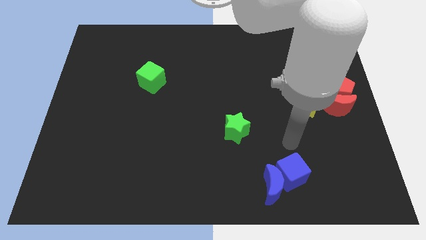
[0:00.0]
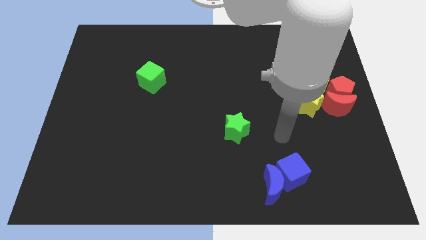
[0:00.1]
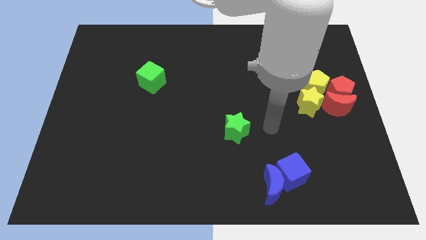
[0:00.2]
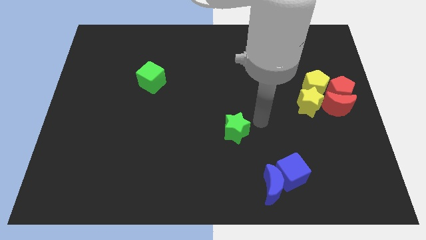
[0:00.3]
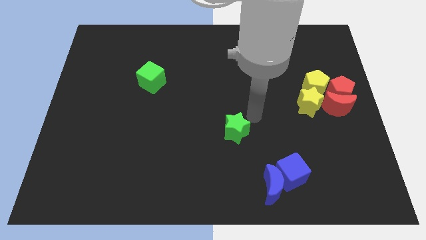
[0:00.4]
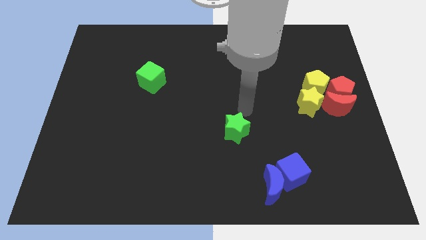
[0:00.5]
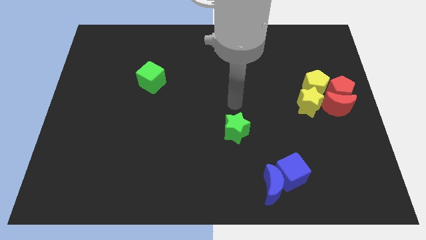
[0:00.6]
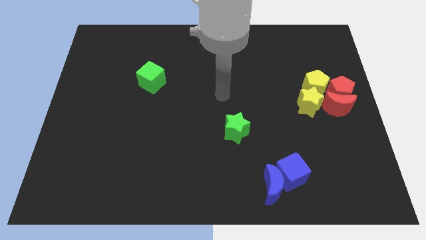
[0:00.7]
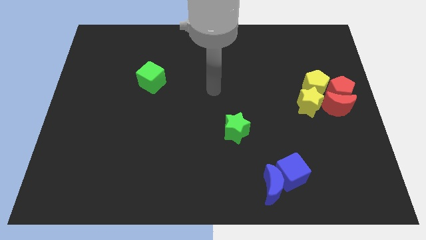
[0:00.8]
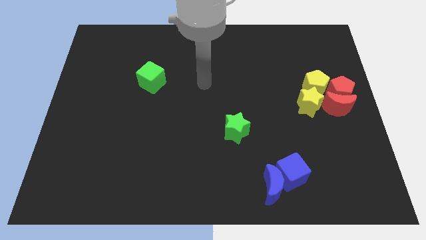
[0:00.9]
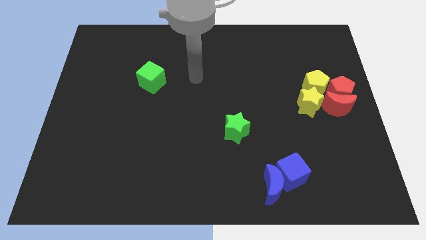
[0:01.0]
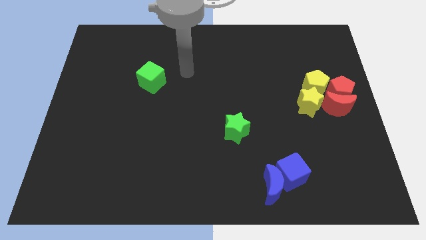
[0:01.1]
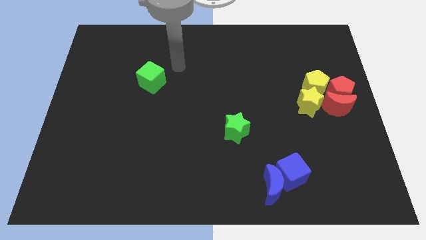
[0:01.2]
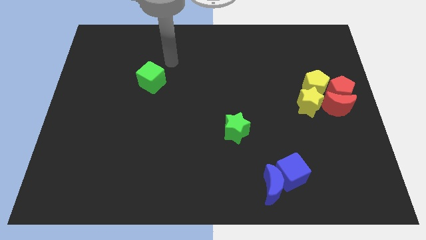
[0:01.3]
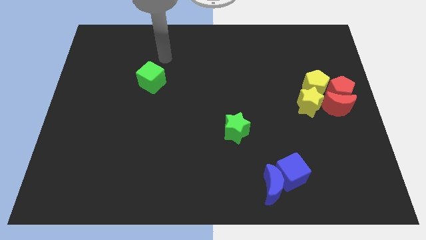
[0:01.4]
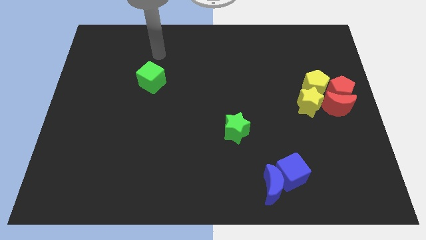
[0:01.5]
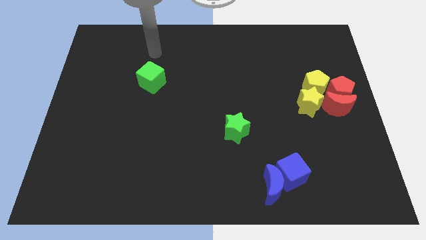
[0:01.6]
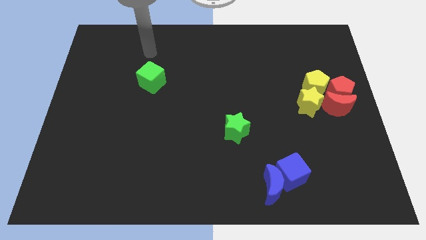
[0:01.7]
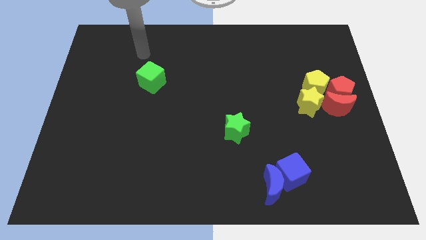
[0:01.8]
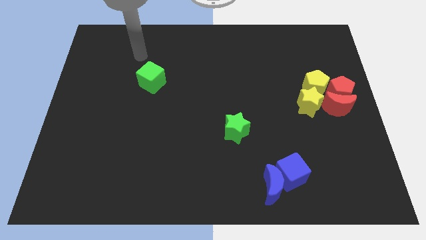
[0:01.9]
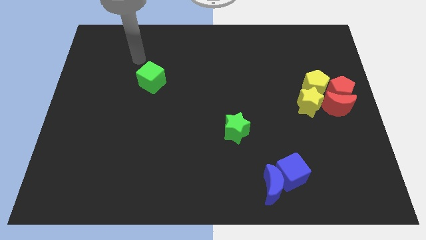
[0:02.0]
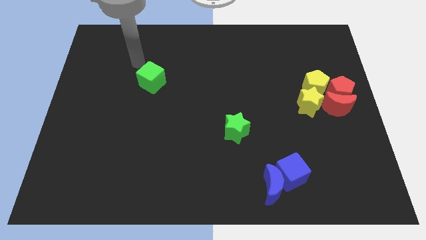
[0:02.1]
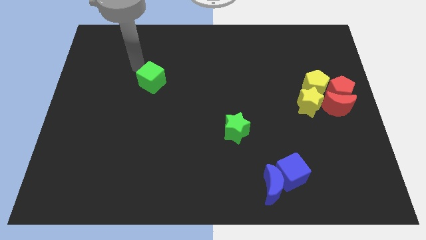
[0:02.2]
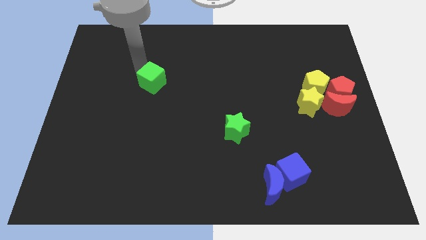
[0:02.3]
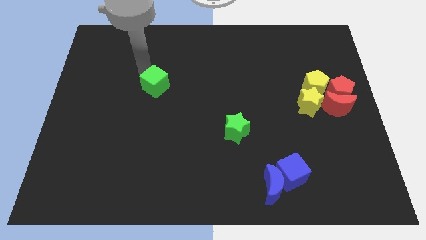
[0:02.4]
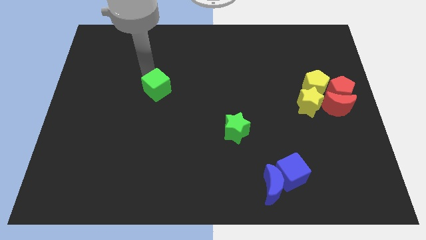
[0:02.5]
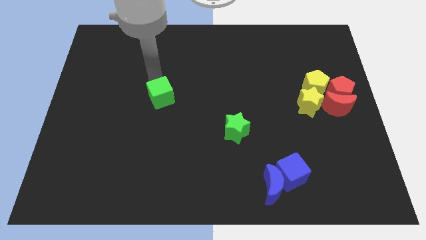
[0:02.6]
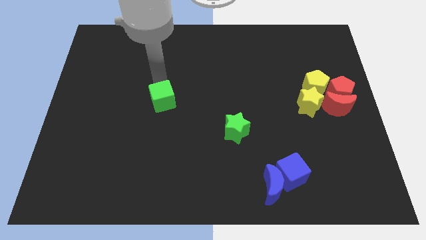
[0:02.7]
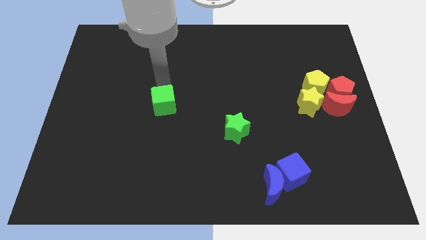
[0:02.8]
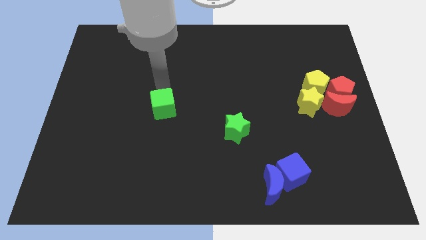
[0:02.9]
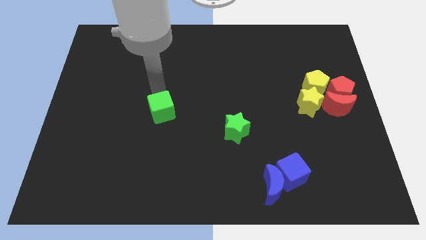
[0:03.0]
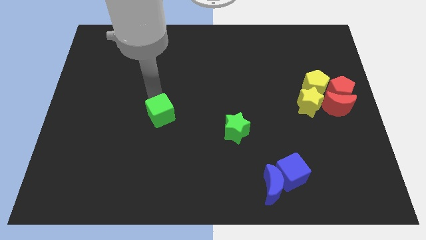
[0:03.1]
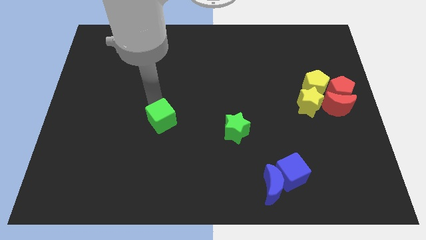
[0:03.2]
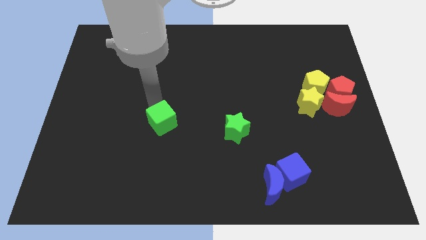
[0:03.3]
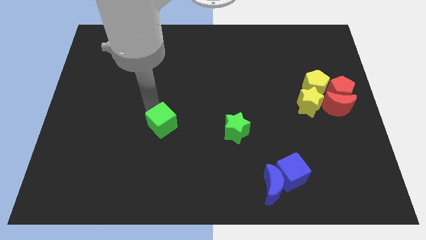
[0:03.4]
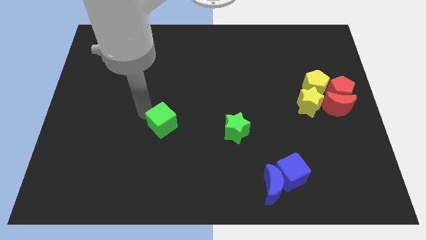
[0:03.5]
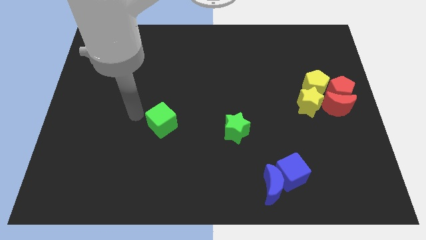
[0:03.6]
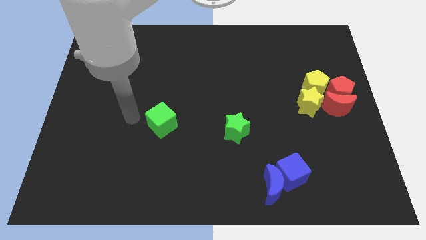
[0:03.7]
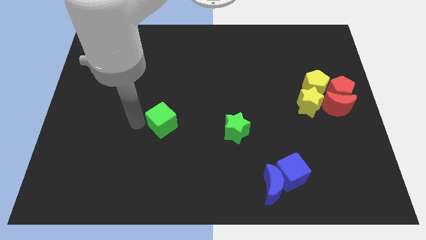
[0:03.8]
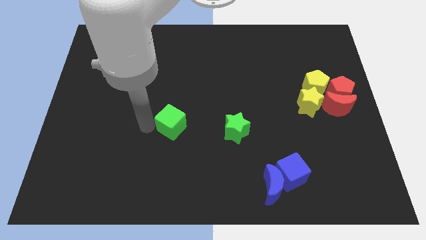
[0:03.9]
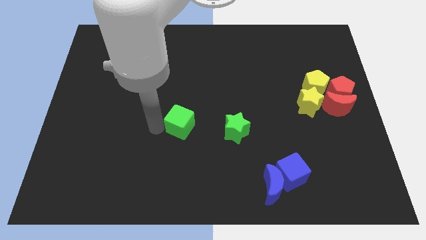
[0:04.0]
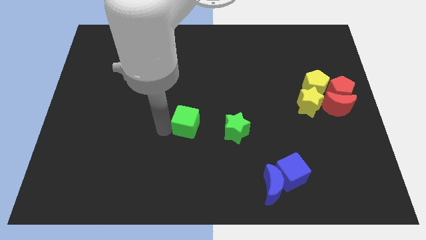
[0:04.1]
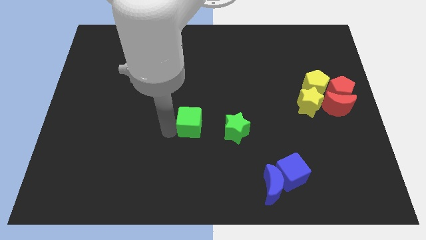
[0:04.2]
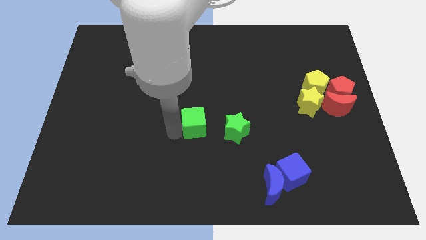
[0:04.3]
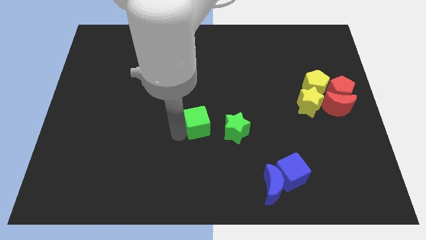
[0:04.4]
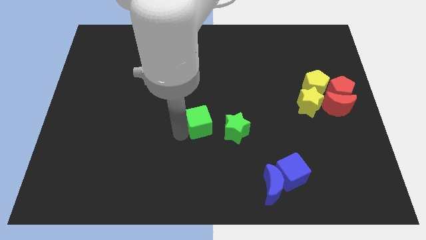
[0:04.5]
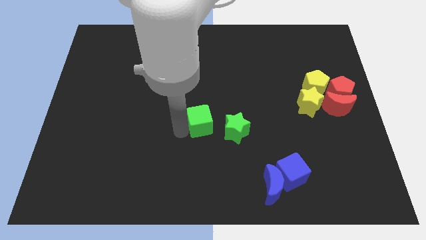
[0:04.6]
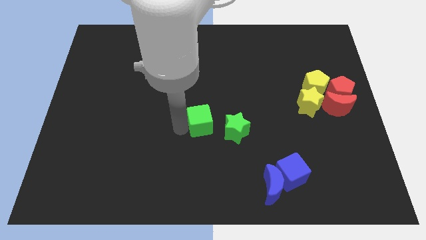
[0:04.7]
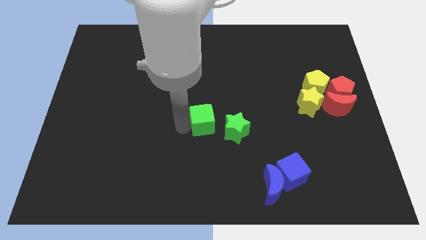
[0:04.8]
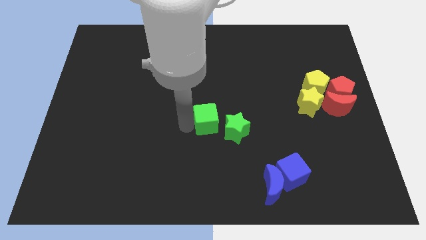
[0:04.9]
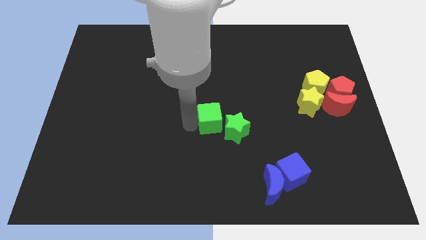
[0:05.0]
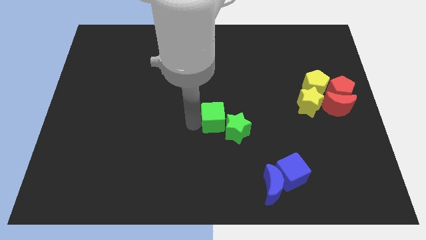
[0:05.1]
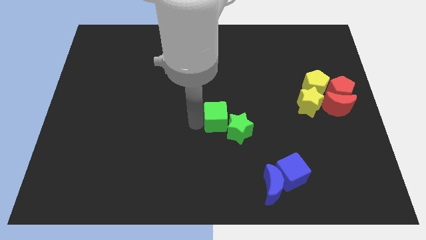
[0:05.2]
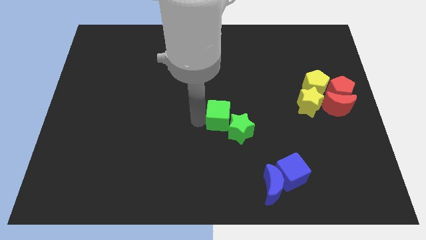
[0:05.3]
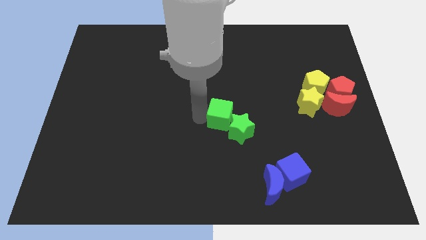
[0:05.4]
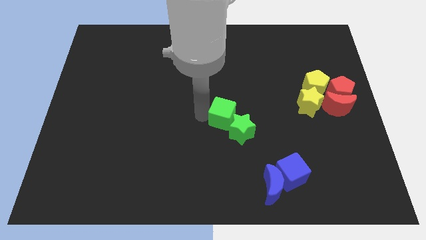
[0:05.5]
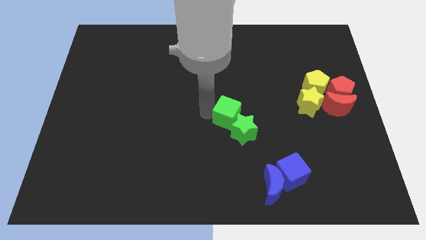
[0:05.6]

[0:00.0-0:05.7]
move the green cube towards the green star

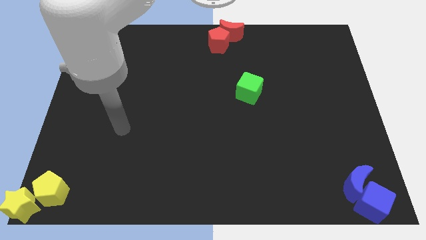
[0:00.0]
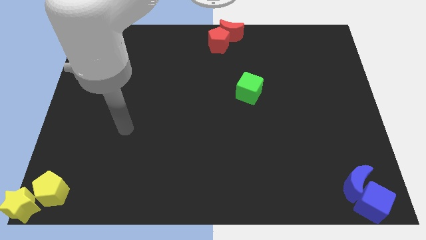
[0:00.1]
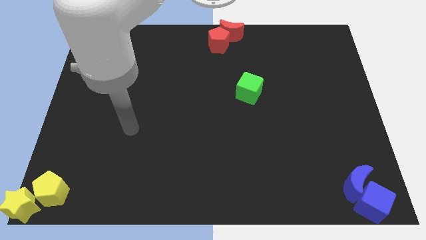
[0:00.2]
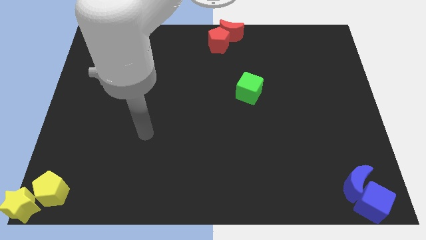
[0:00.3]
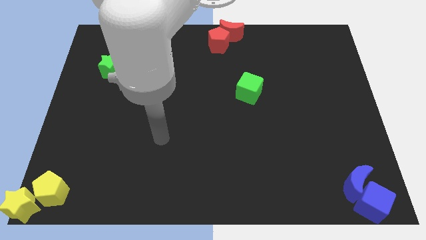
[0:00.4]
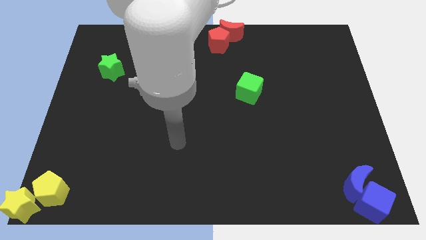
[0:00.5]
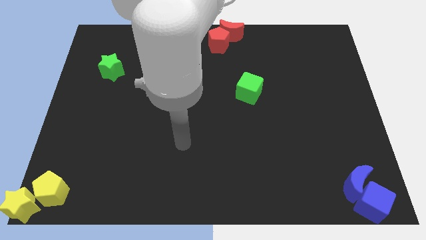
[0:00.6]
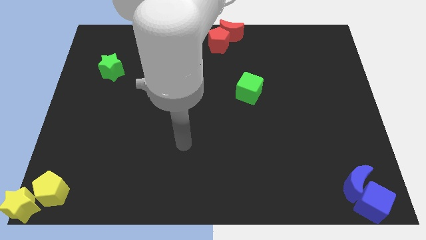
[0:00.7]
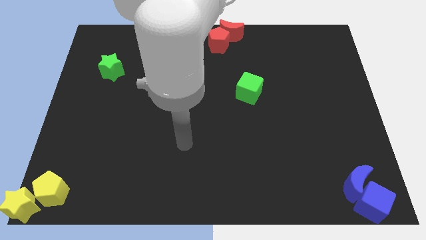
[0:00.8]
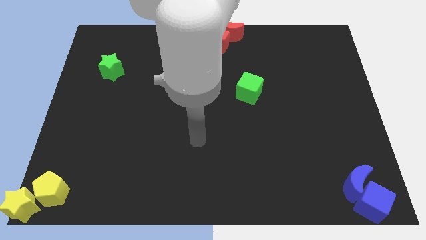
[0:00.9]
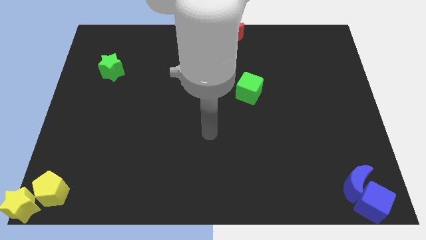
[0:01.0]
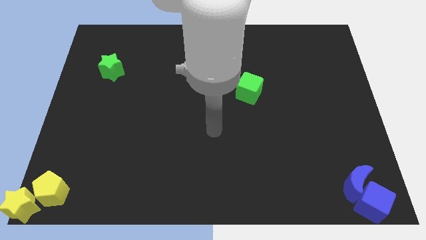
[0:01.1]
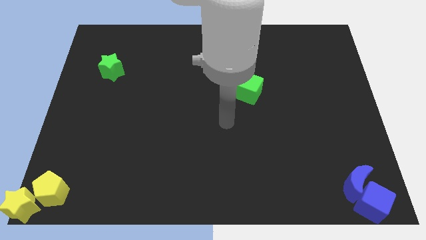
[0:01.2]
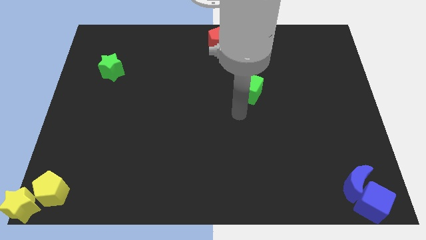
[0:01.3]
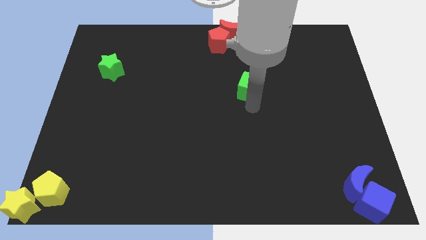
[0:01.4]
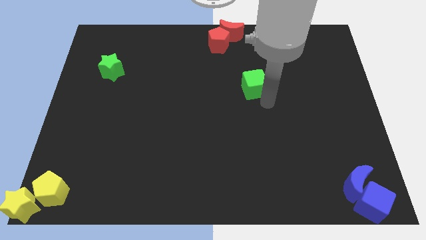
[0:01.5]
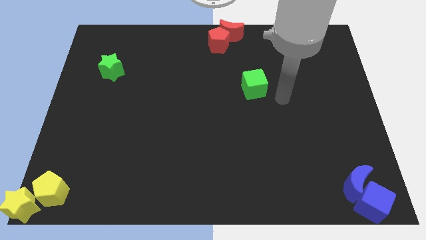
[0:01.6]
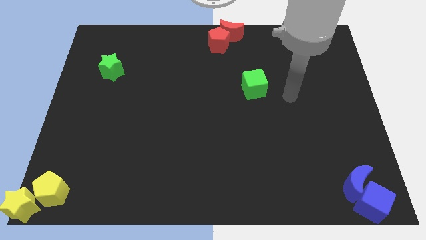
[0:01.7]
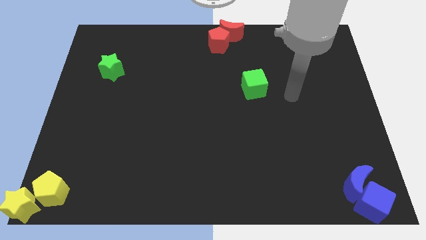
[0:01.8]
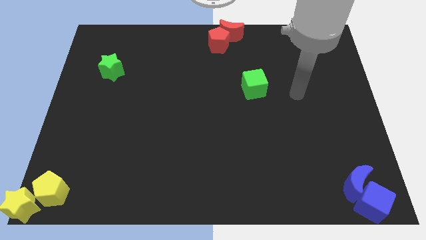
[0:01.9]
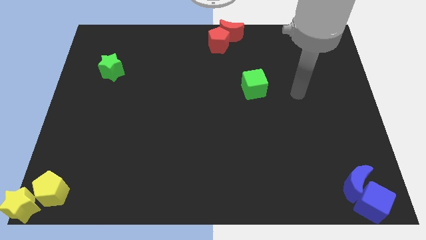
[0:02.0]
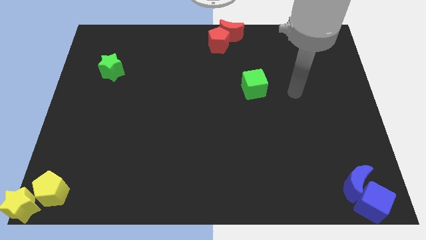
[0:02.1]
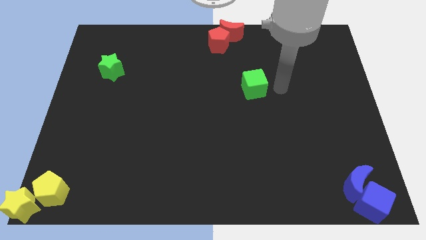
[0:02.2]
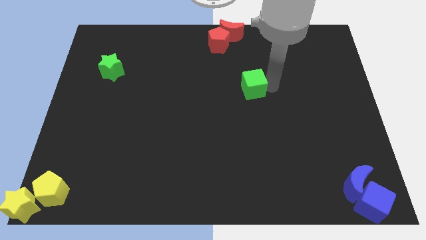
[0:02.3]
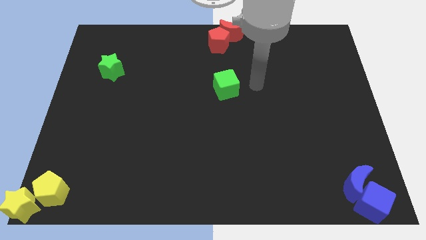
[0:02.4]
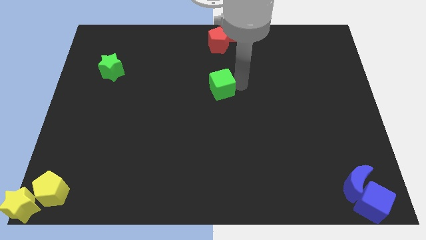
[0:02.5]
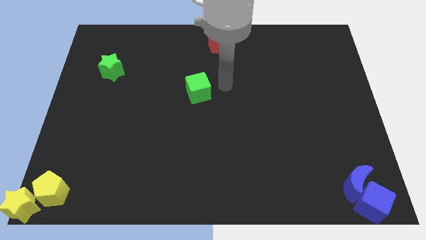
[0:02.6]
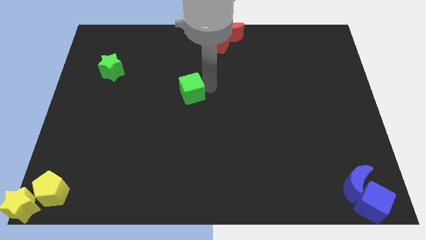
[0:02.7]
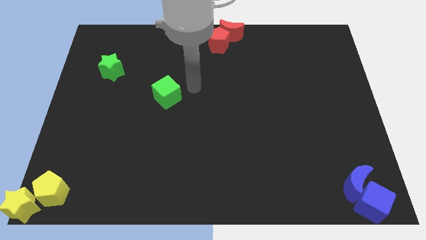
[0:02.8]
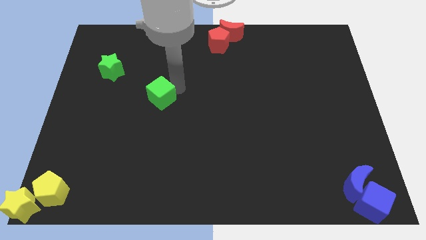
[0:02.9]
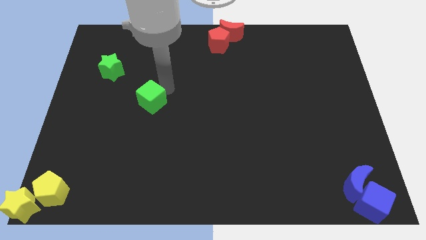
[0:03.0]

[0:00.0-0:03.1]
place the green cube below the red pentagon

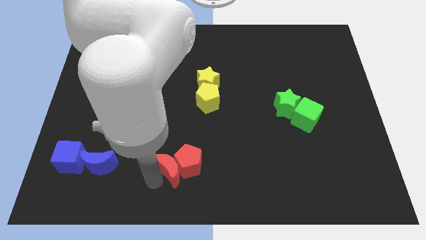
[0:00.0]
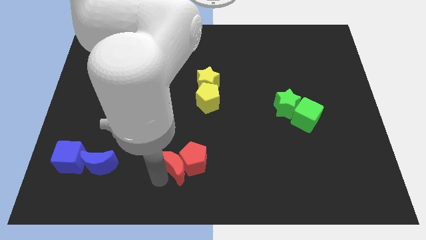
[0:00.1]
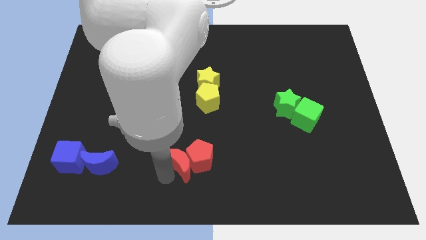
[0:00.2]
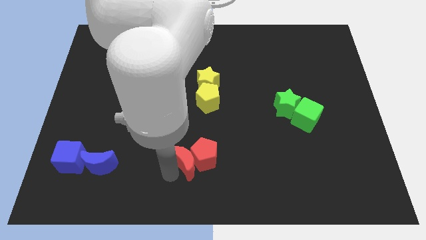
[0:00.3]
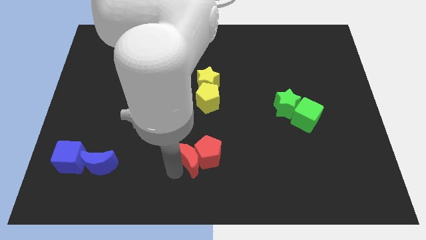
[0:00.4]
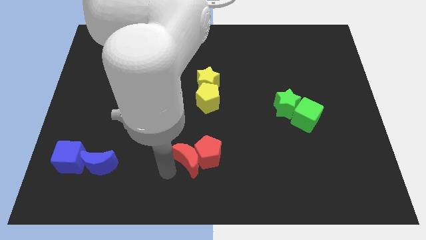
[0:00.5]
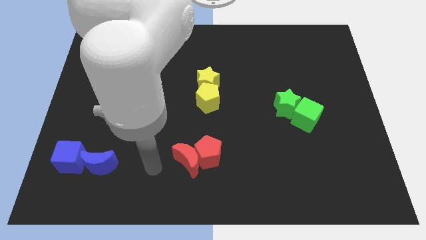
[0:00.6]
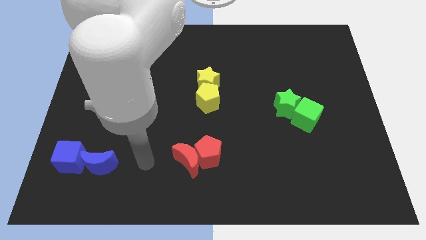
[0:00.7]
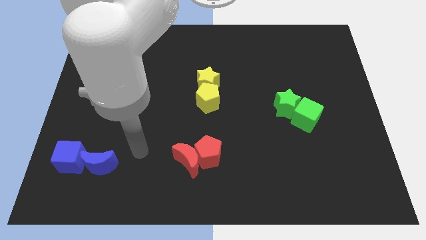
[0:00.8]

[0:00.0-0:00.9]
move the red crescent and red pentagon together slightly to the bottom of yellow blocks
